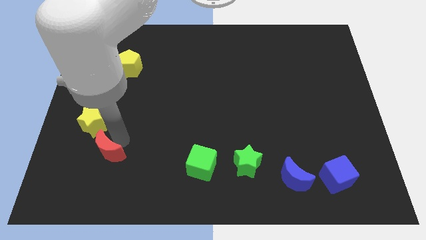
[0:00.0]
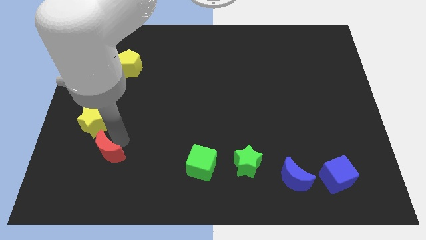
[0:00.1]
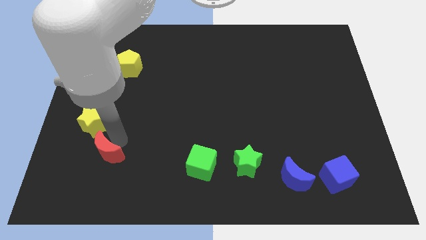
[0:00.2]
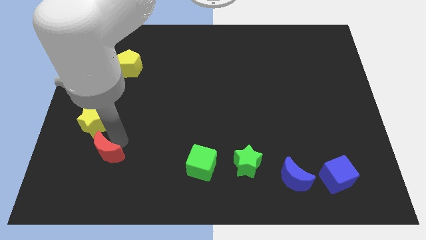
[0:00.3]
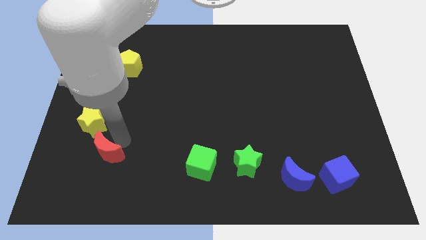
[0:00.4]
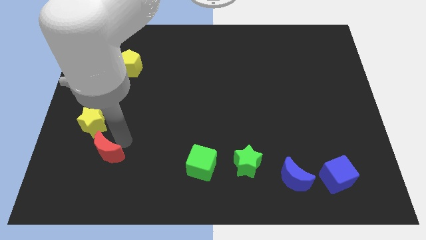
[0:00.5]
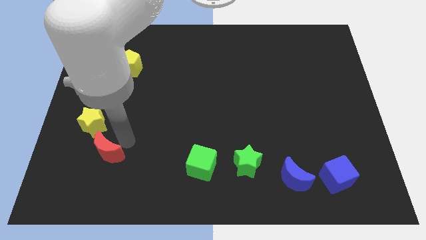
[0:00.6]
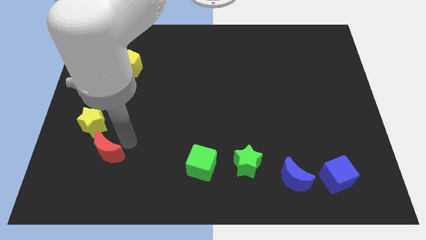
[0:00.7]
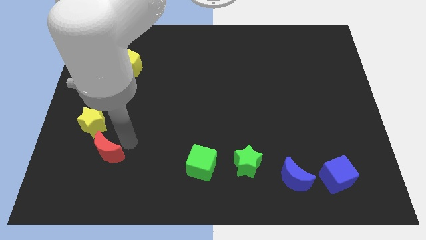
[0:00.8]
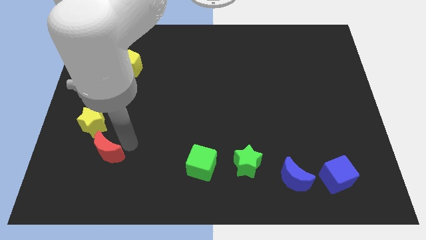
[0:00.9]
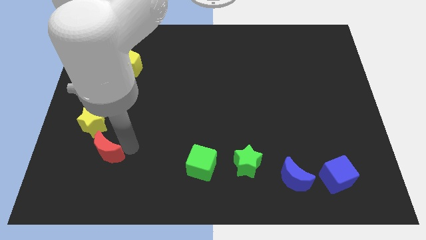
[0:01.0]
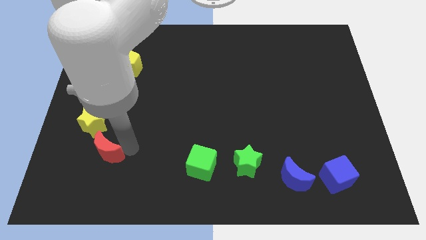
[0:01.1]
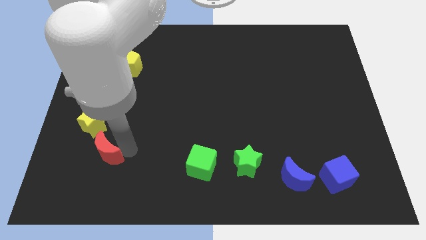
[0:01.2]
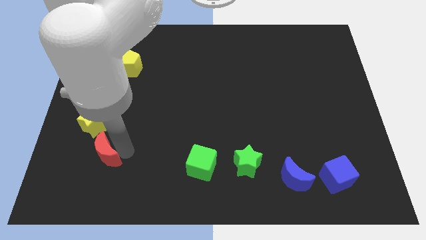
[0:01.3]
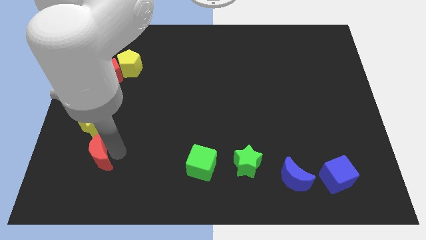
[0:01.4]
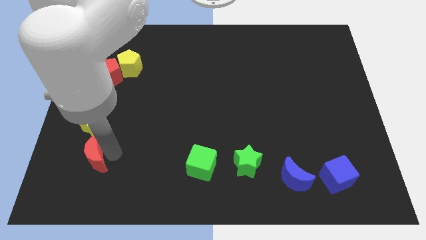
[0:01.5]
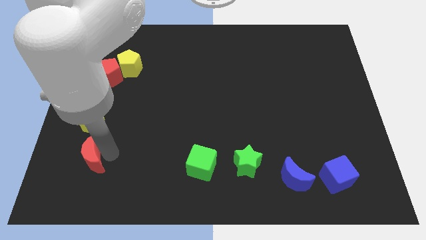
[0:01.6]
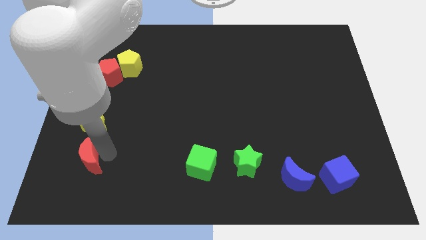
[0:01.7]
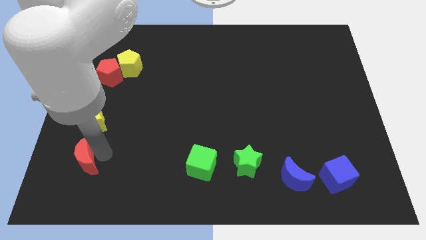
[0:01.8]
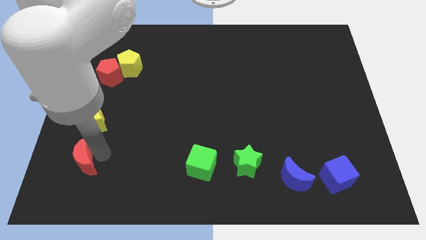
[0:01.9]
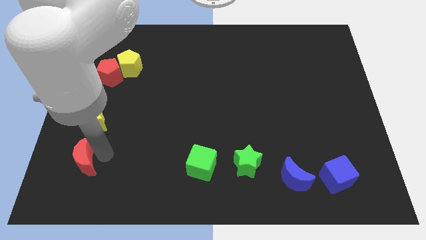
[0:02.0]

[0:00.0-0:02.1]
push the red crescent to the bottom of the yellow star

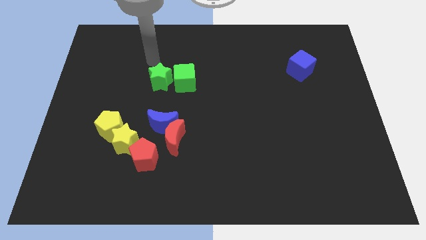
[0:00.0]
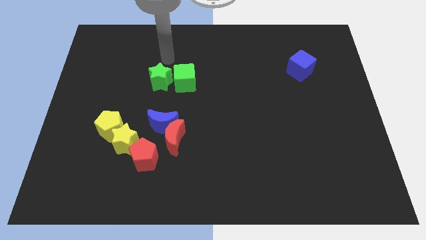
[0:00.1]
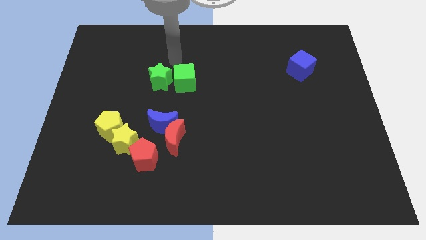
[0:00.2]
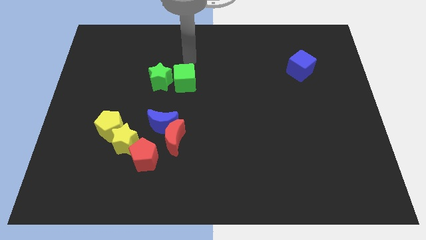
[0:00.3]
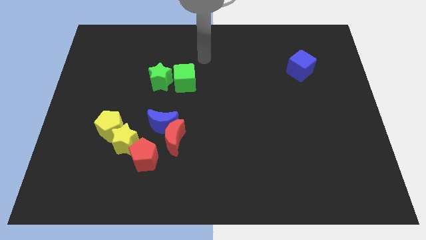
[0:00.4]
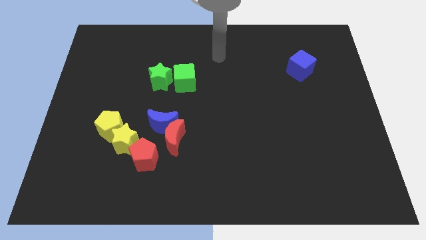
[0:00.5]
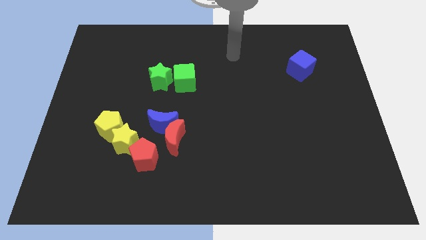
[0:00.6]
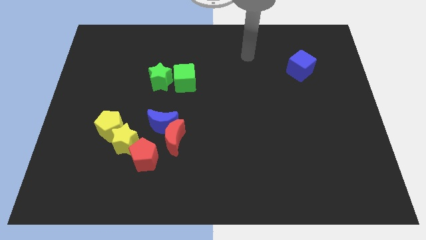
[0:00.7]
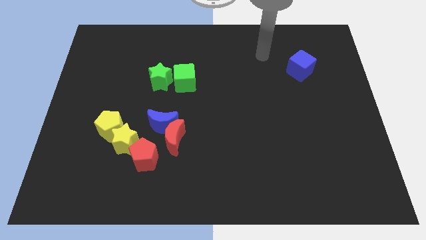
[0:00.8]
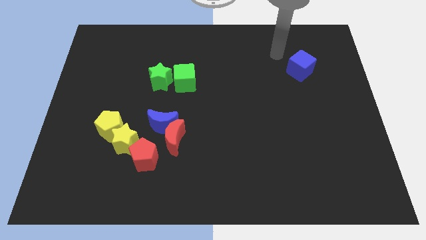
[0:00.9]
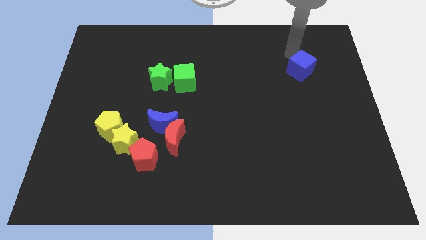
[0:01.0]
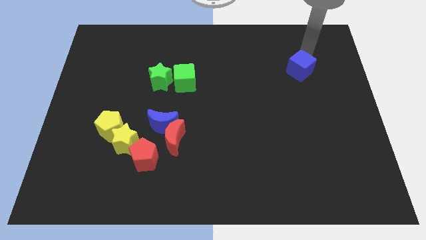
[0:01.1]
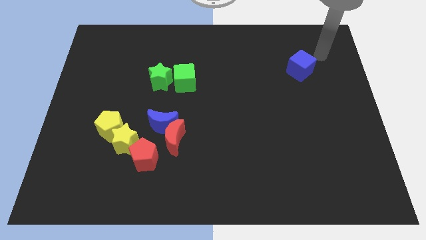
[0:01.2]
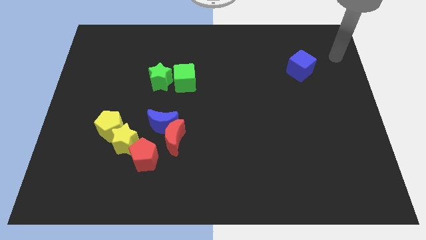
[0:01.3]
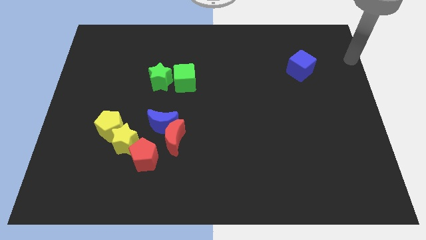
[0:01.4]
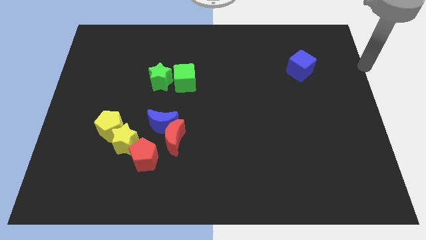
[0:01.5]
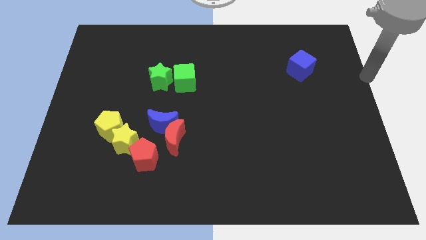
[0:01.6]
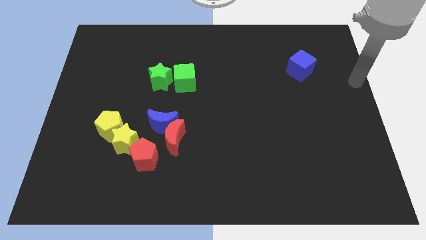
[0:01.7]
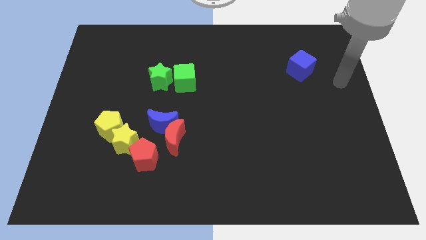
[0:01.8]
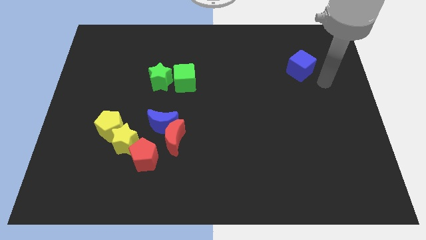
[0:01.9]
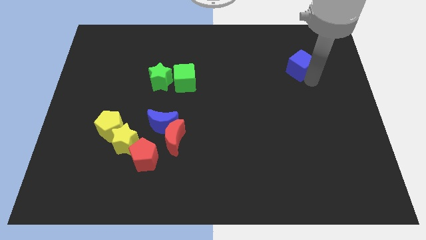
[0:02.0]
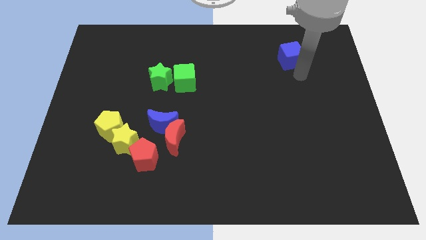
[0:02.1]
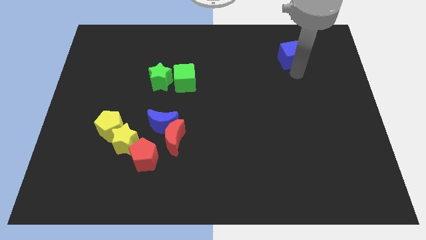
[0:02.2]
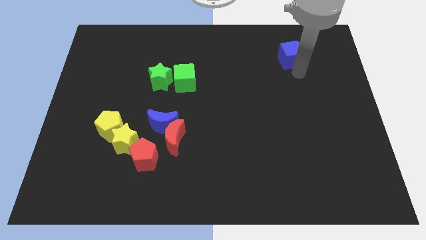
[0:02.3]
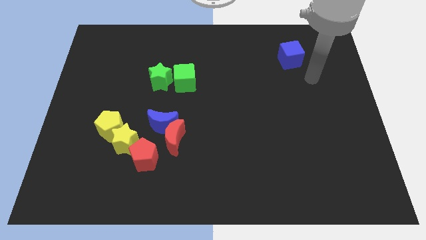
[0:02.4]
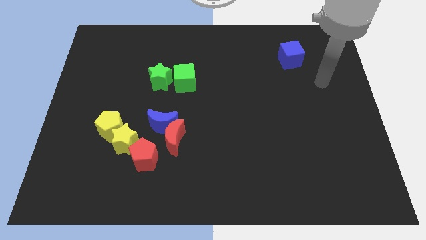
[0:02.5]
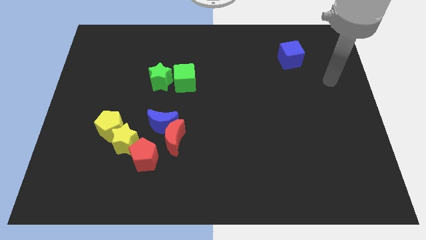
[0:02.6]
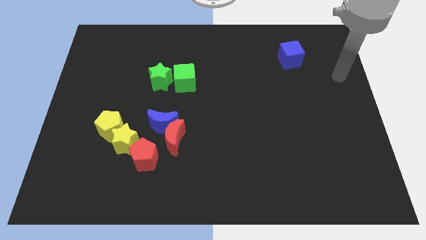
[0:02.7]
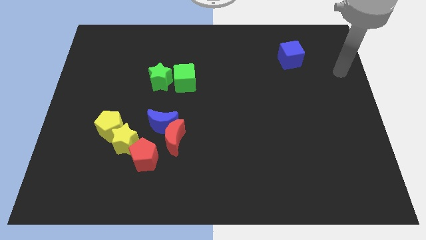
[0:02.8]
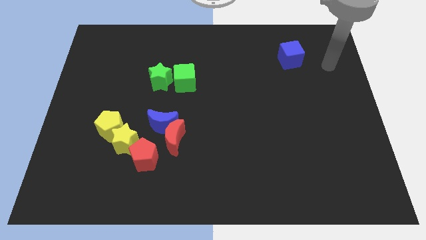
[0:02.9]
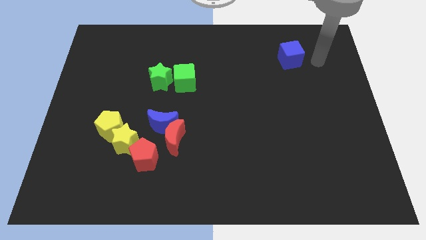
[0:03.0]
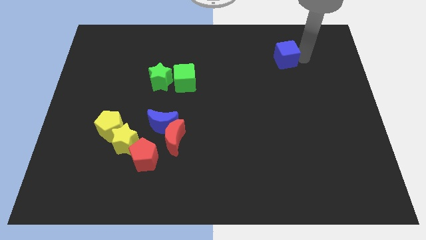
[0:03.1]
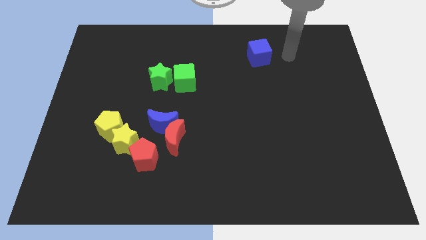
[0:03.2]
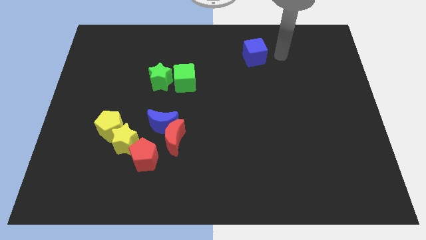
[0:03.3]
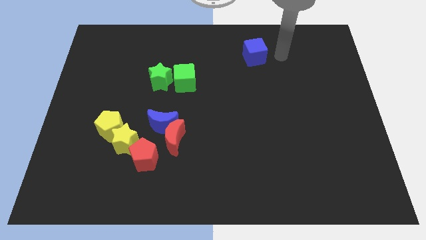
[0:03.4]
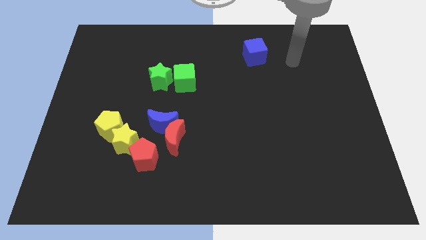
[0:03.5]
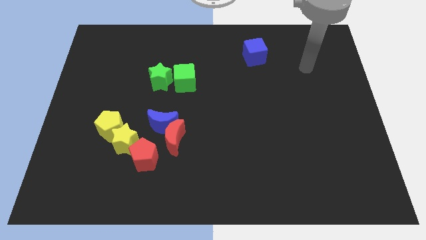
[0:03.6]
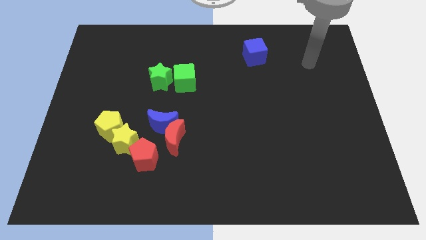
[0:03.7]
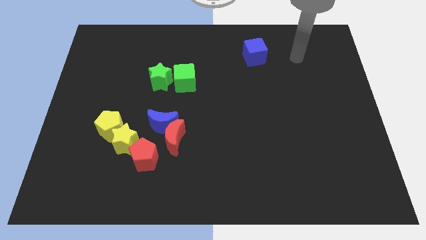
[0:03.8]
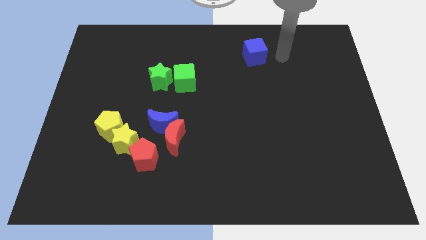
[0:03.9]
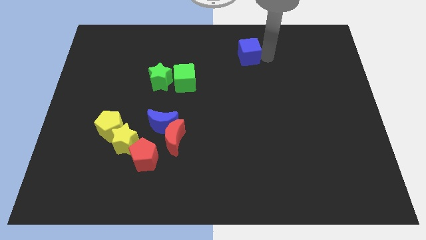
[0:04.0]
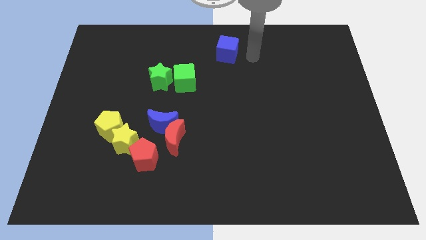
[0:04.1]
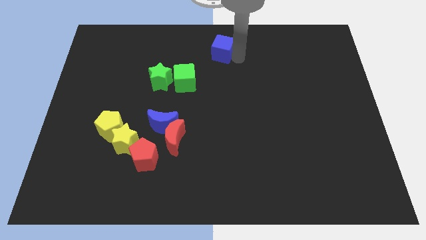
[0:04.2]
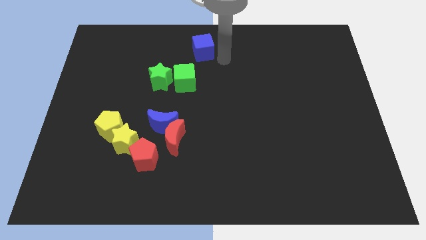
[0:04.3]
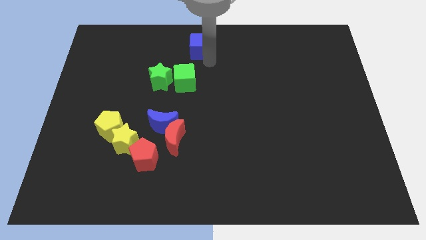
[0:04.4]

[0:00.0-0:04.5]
move the blue cube to top center

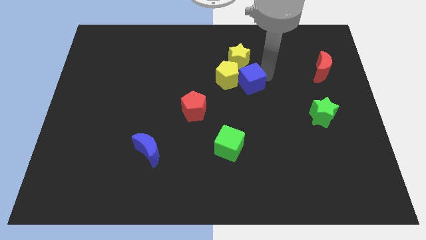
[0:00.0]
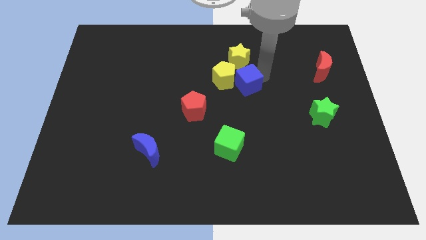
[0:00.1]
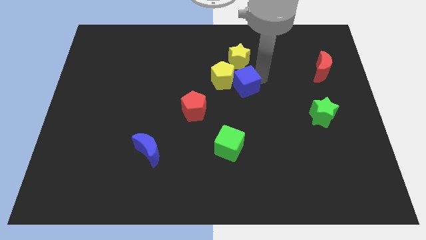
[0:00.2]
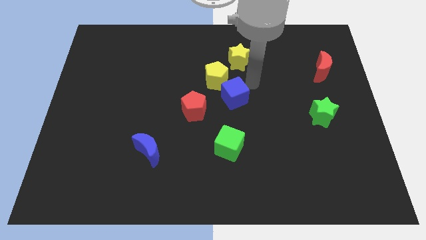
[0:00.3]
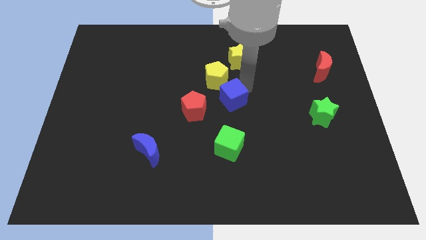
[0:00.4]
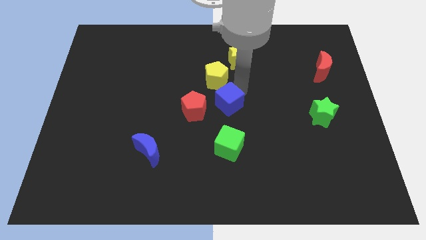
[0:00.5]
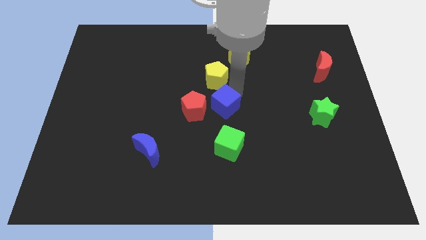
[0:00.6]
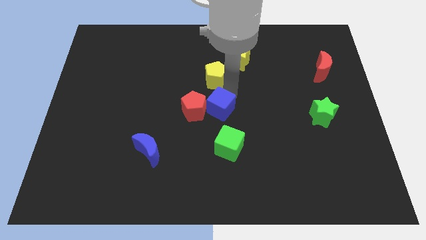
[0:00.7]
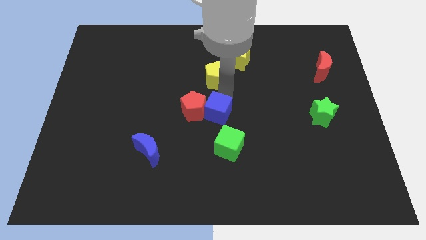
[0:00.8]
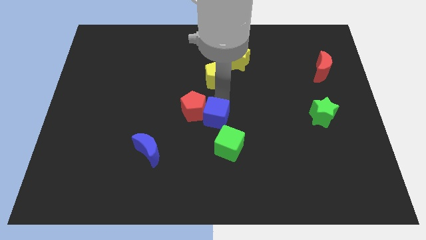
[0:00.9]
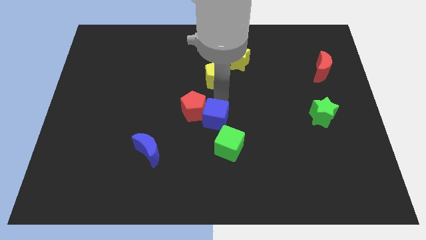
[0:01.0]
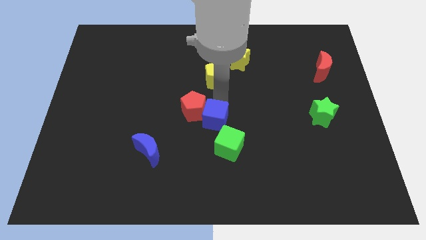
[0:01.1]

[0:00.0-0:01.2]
place blue cube to the center of the board

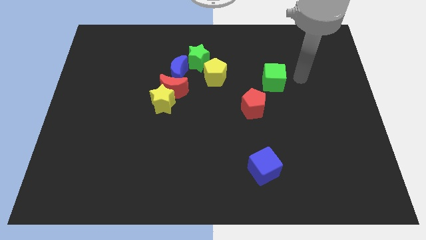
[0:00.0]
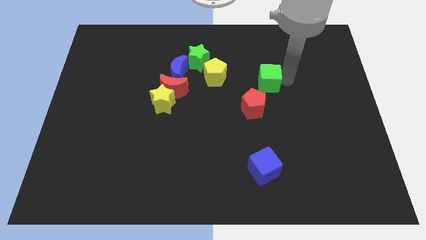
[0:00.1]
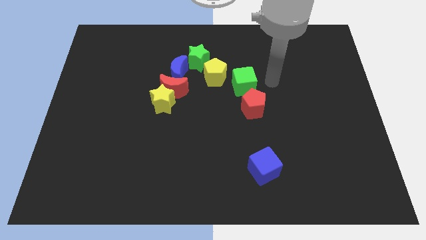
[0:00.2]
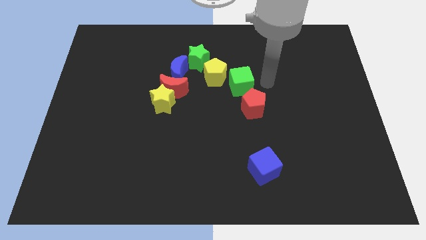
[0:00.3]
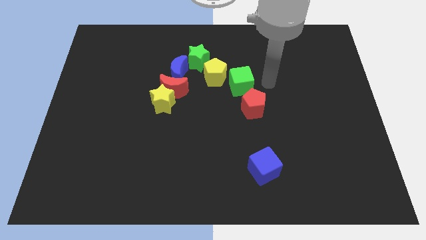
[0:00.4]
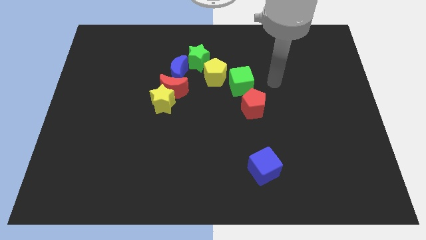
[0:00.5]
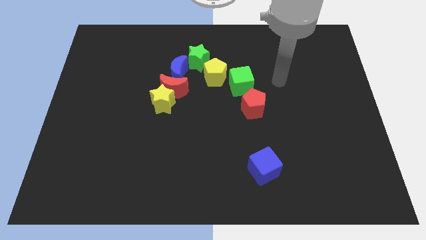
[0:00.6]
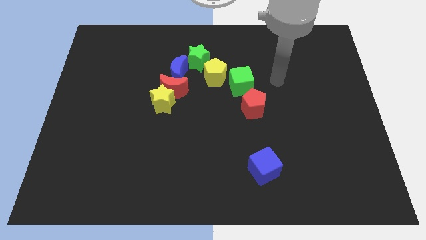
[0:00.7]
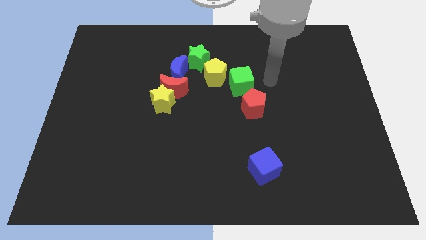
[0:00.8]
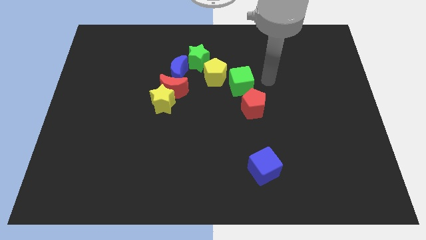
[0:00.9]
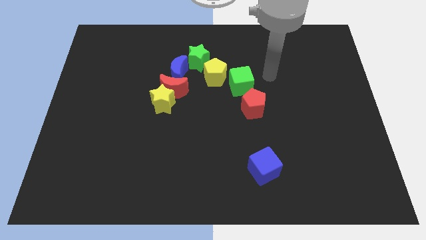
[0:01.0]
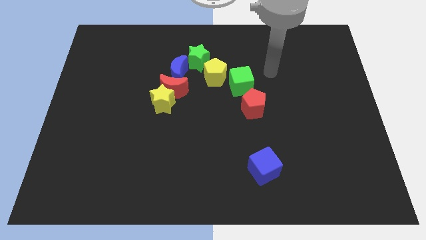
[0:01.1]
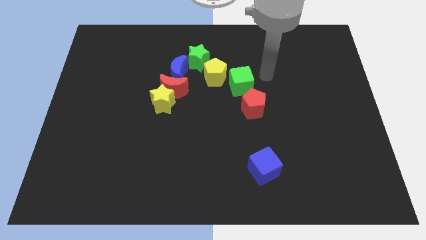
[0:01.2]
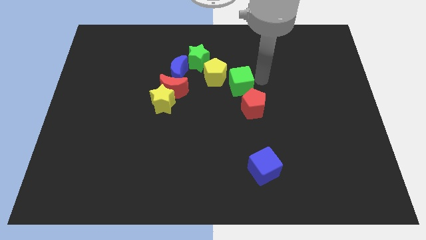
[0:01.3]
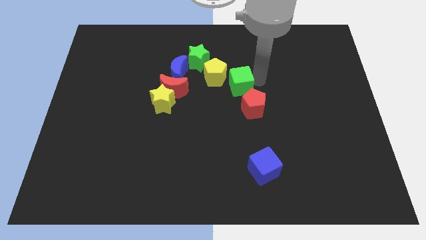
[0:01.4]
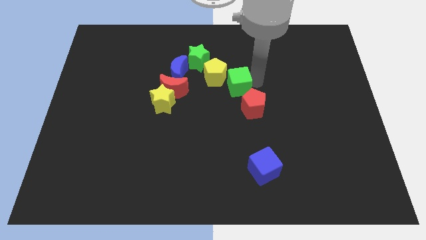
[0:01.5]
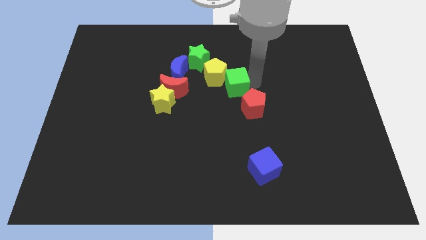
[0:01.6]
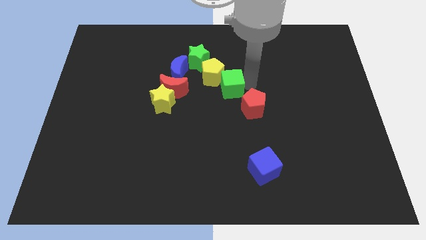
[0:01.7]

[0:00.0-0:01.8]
put the green cube to the bottom right of the yellow pentagon
